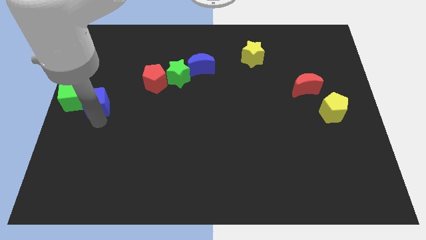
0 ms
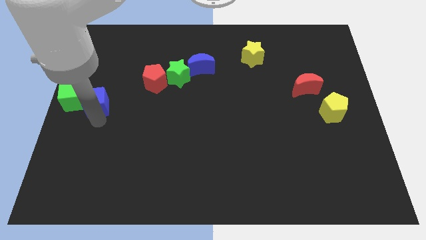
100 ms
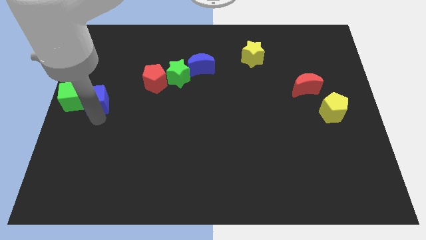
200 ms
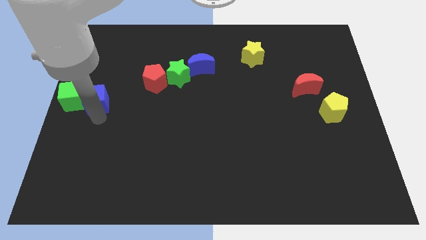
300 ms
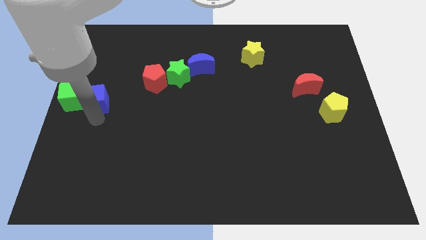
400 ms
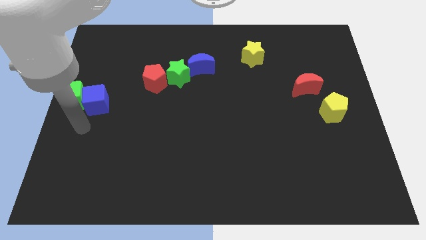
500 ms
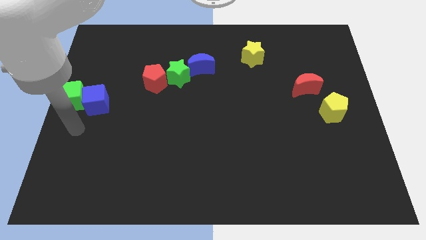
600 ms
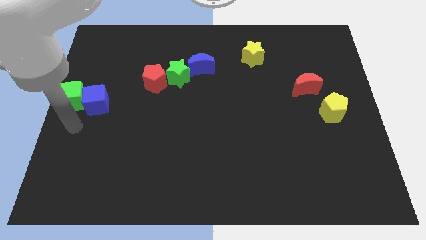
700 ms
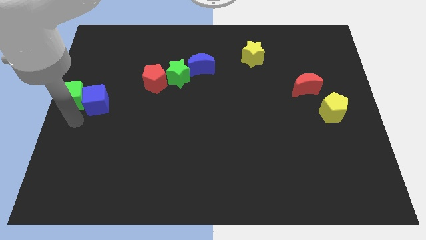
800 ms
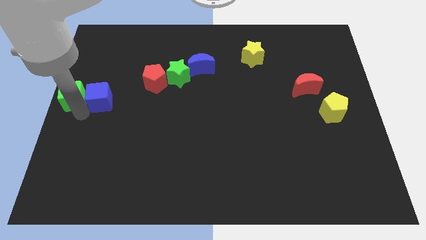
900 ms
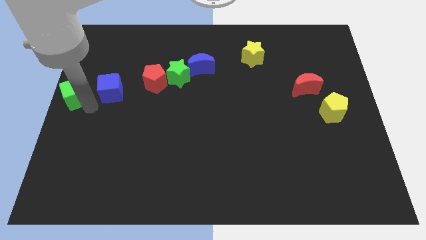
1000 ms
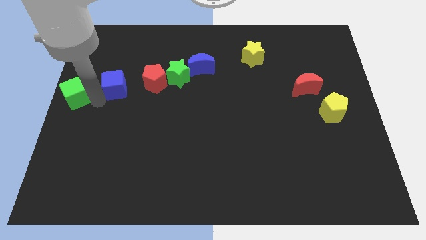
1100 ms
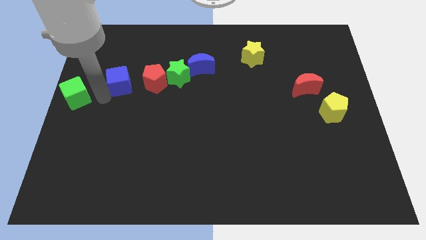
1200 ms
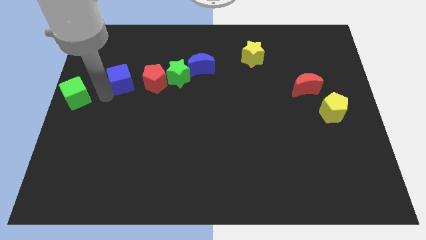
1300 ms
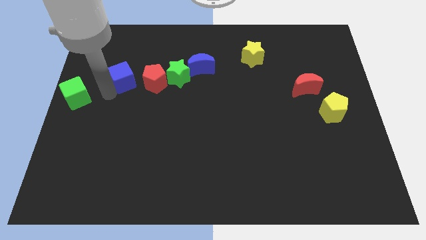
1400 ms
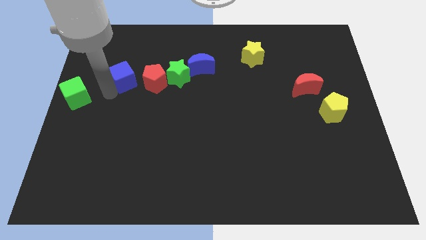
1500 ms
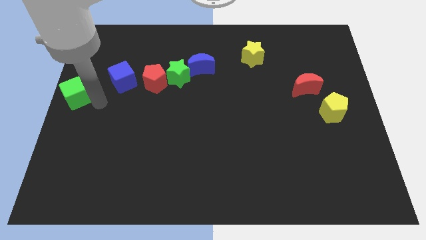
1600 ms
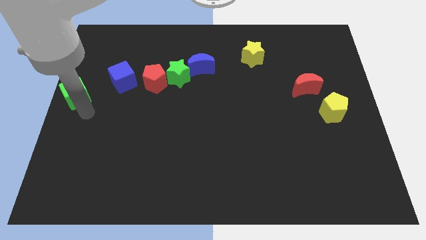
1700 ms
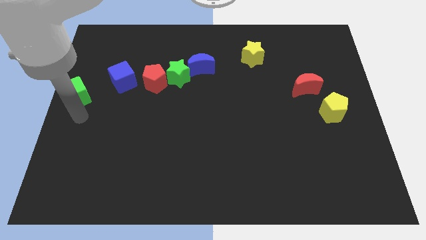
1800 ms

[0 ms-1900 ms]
move the blue cube to left side of the red pentagon

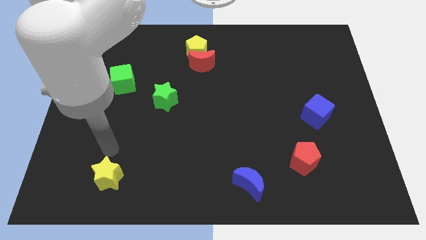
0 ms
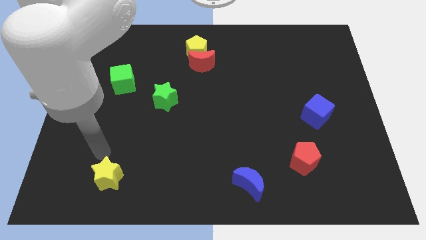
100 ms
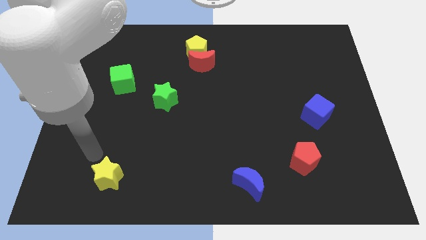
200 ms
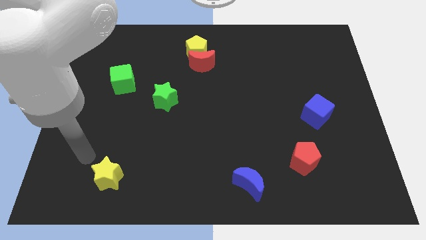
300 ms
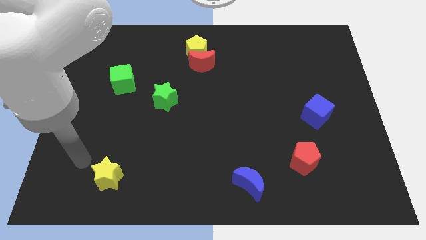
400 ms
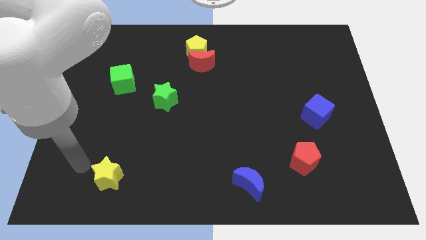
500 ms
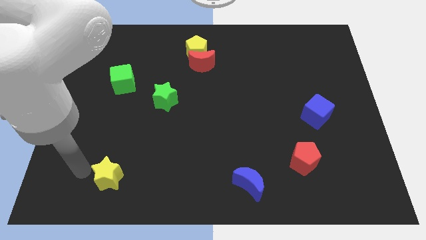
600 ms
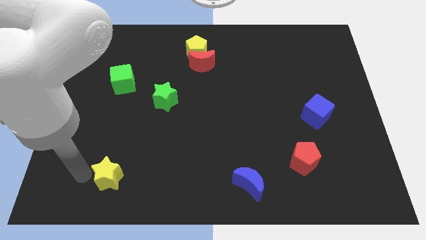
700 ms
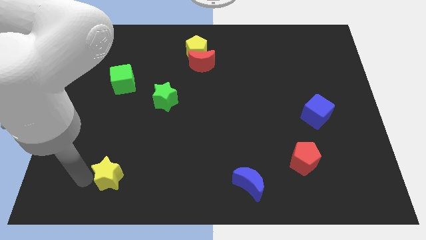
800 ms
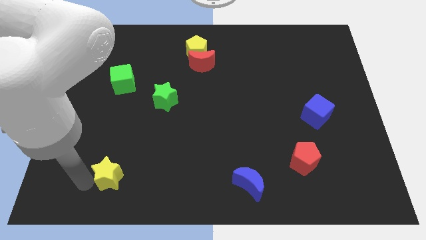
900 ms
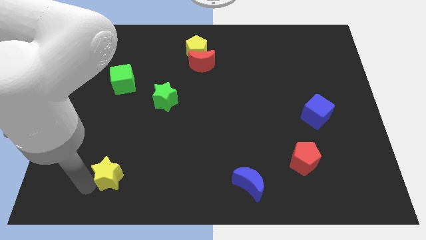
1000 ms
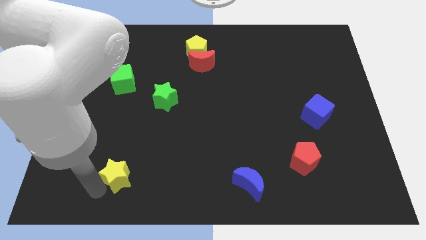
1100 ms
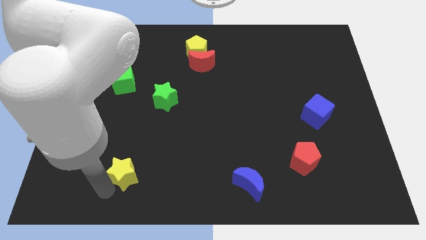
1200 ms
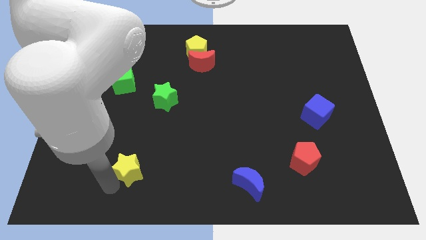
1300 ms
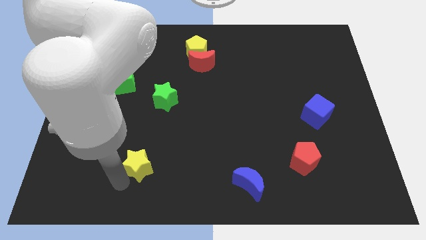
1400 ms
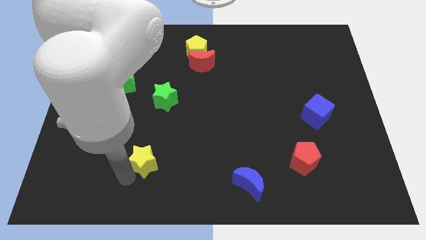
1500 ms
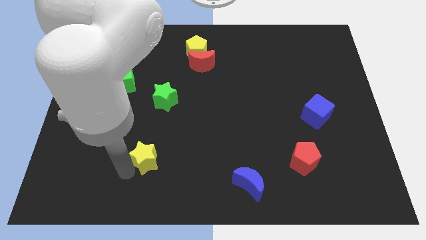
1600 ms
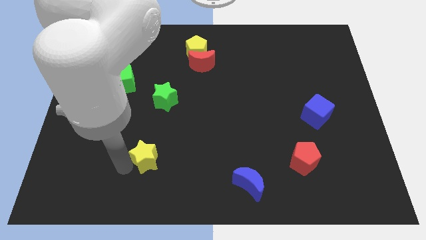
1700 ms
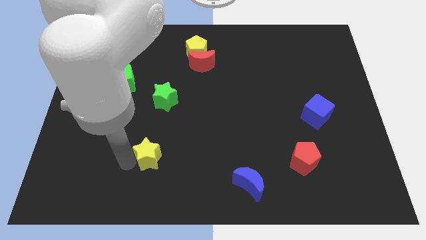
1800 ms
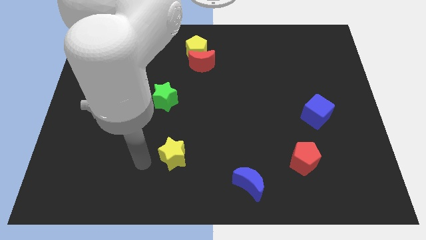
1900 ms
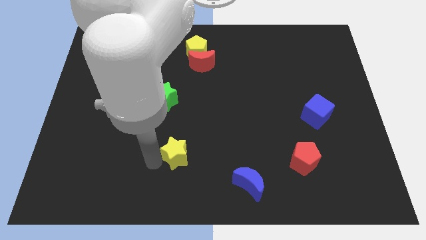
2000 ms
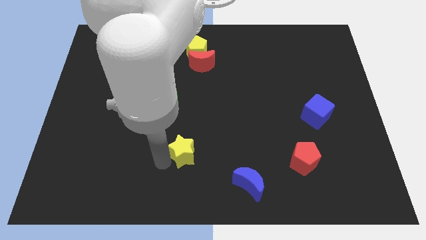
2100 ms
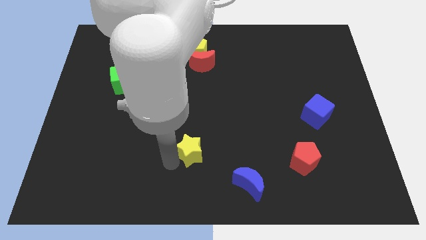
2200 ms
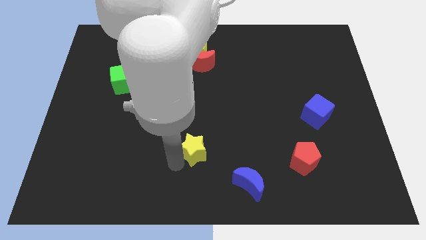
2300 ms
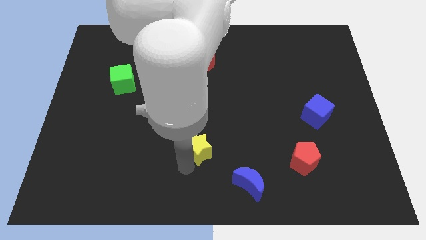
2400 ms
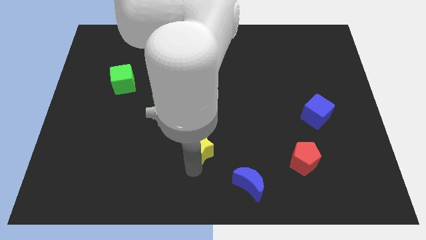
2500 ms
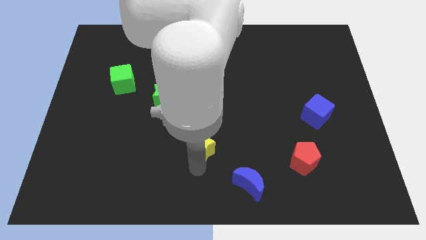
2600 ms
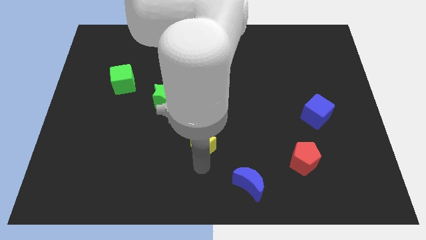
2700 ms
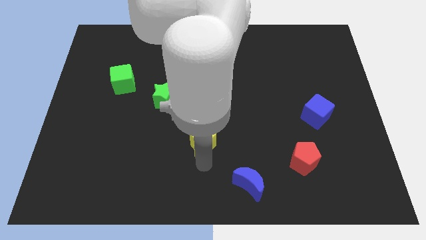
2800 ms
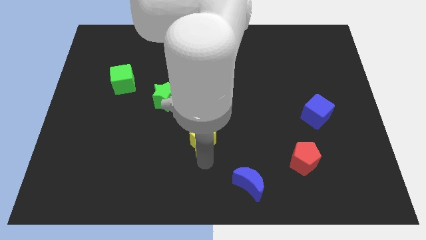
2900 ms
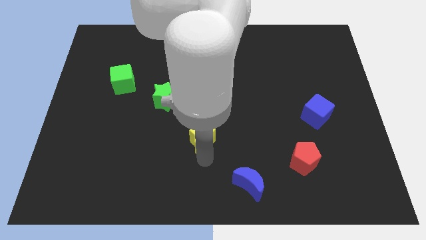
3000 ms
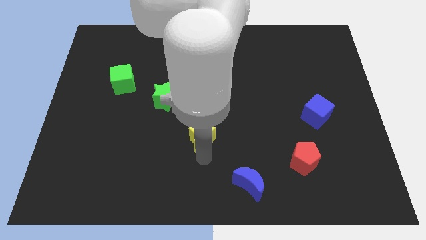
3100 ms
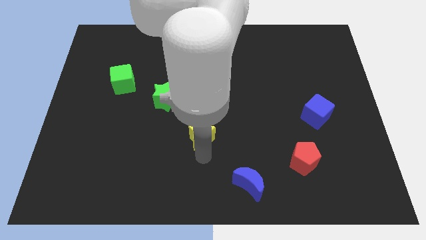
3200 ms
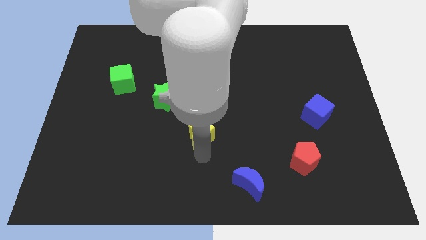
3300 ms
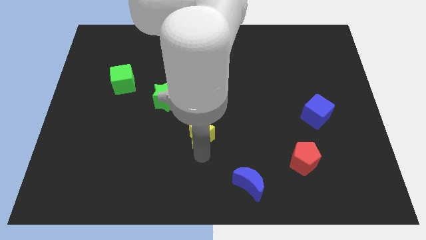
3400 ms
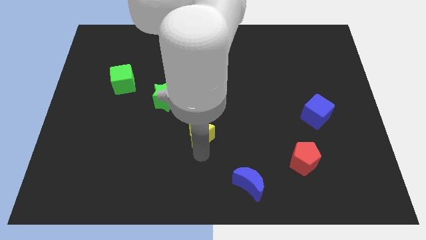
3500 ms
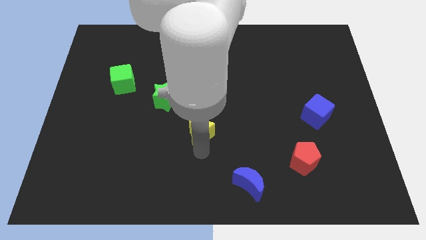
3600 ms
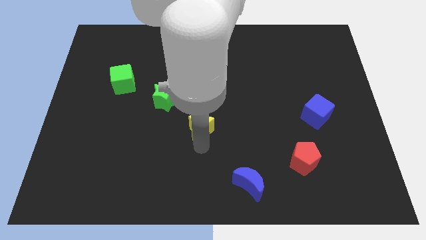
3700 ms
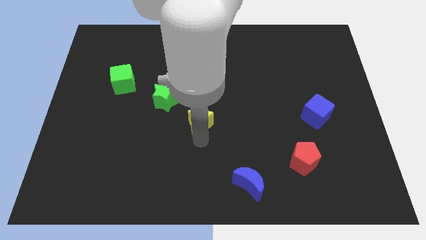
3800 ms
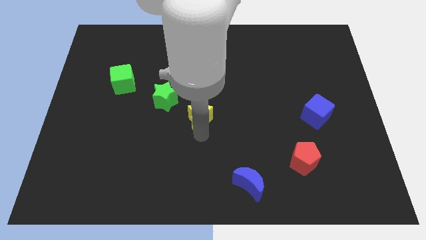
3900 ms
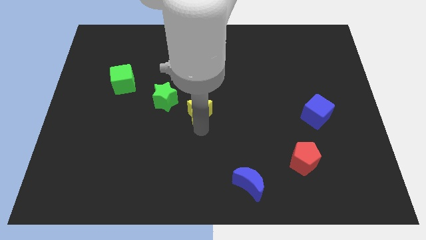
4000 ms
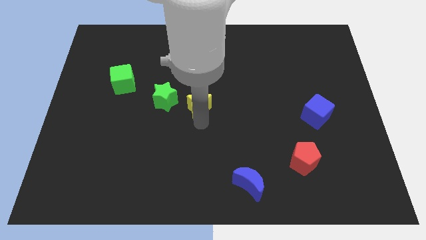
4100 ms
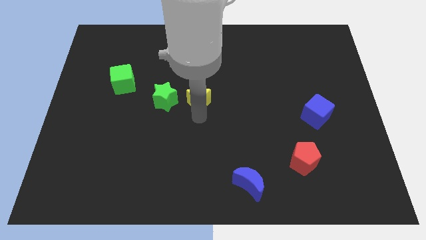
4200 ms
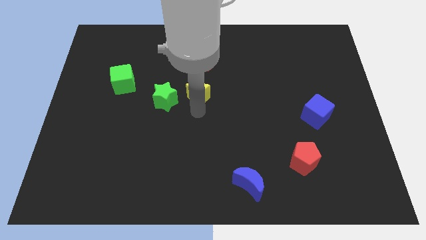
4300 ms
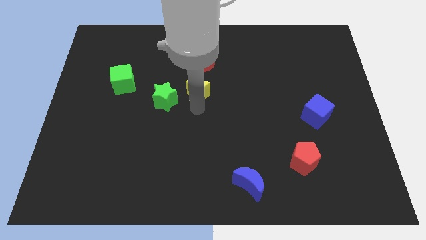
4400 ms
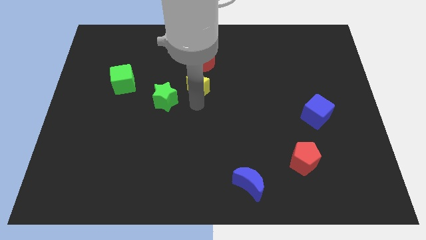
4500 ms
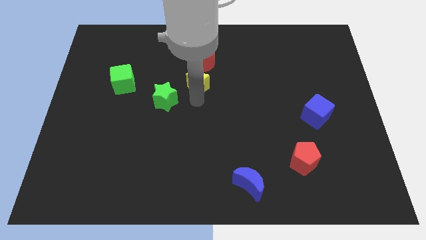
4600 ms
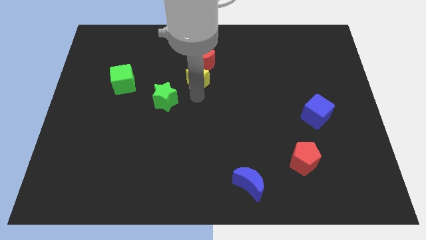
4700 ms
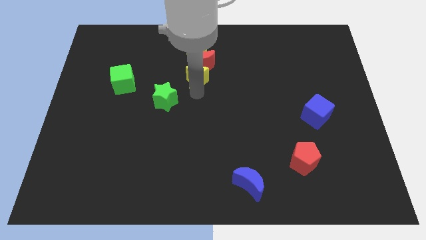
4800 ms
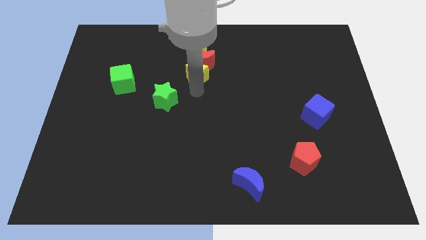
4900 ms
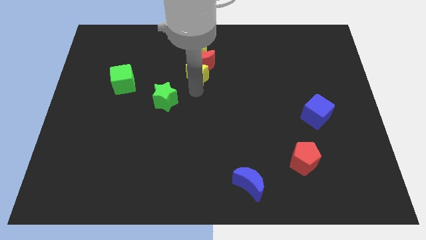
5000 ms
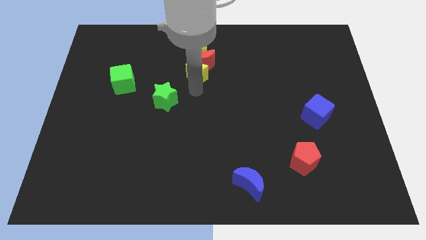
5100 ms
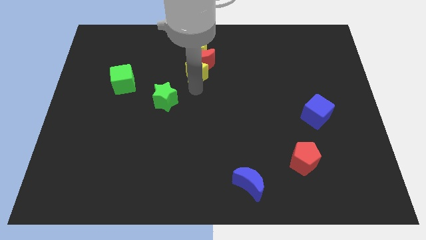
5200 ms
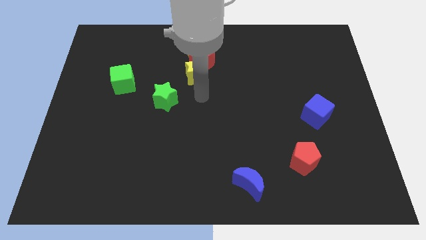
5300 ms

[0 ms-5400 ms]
place the yellow star right to the green cube

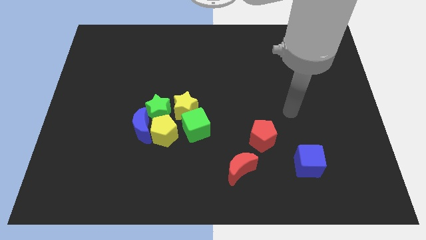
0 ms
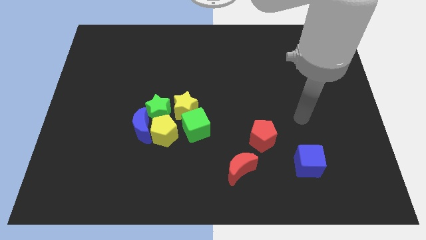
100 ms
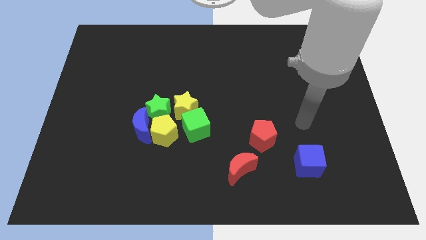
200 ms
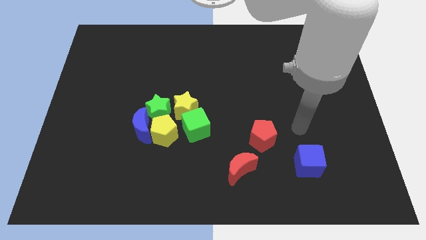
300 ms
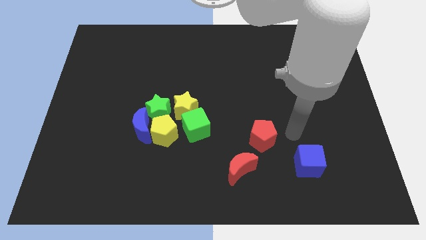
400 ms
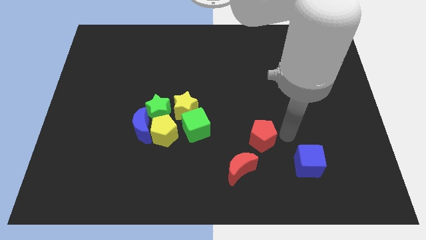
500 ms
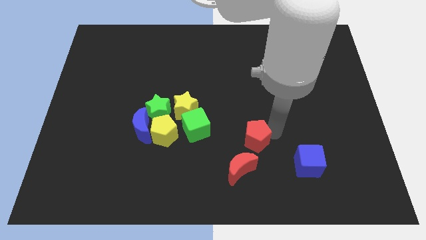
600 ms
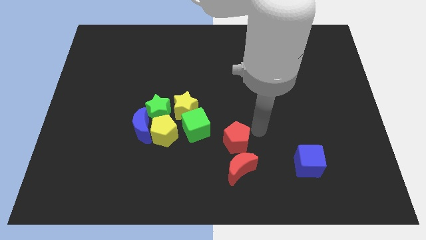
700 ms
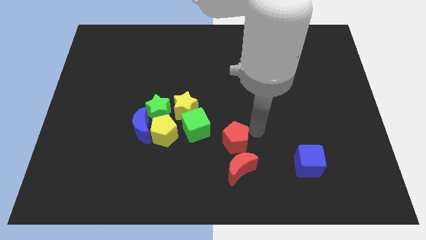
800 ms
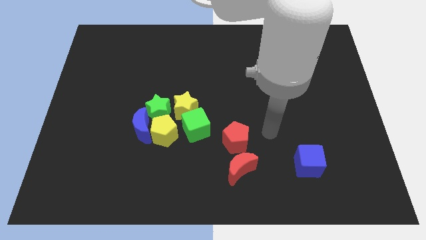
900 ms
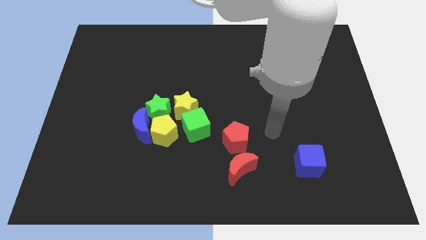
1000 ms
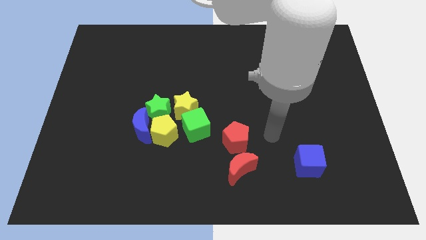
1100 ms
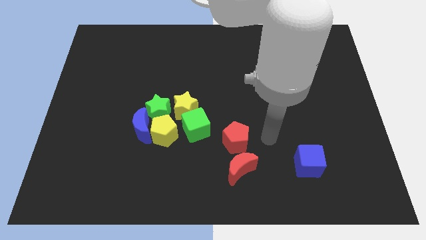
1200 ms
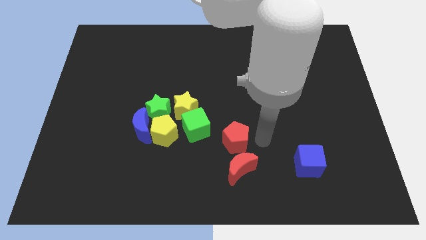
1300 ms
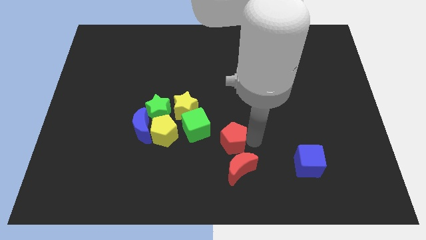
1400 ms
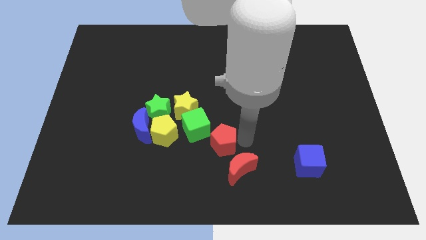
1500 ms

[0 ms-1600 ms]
slide the red pentagon above the red moon
